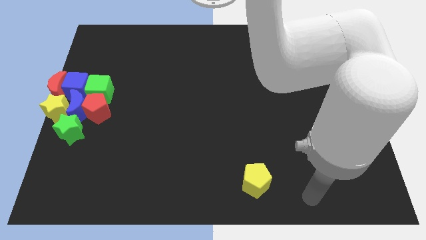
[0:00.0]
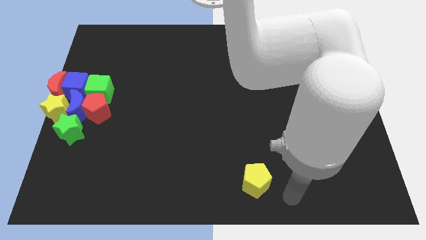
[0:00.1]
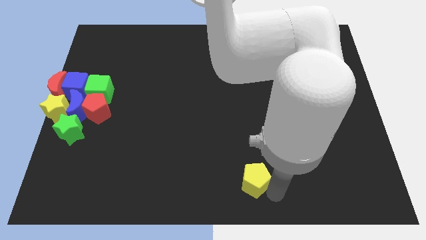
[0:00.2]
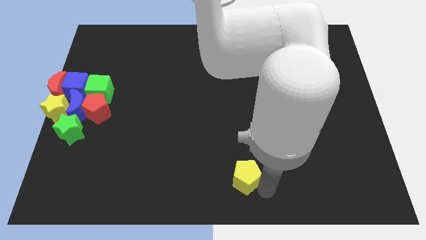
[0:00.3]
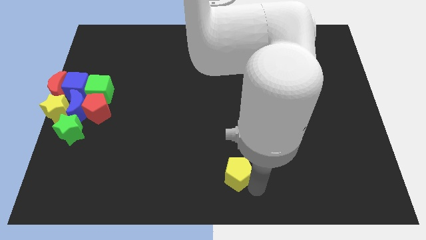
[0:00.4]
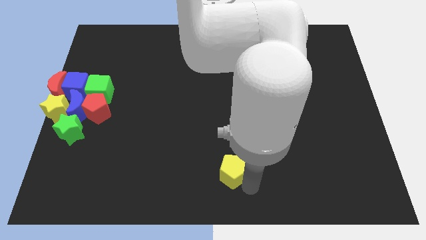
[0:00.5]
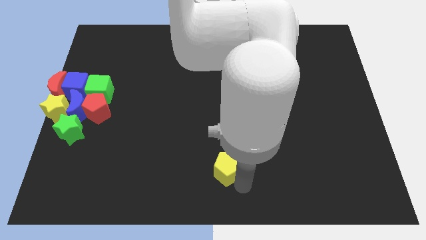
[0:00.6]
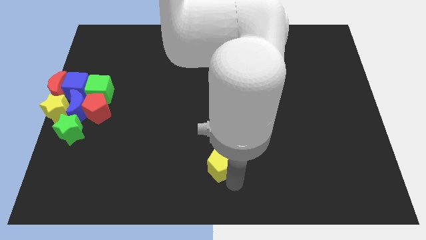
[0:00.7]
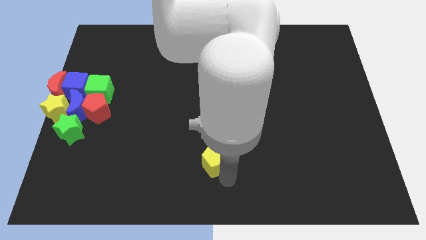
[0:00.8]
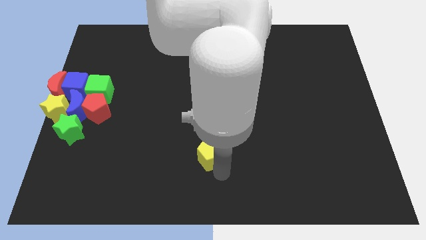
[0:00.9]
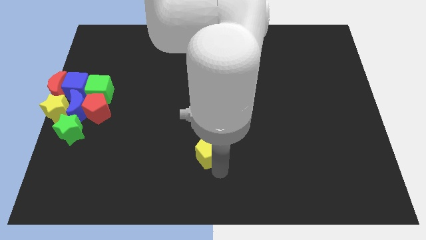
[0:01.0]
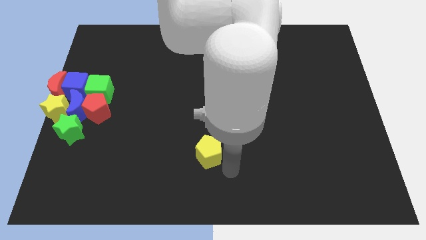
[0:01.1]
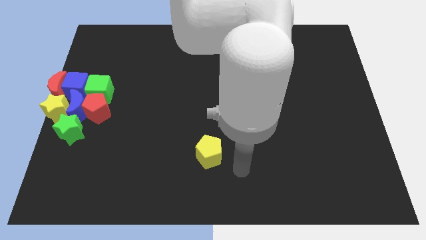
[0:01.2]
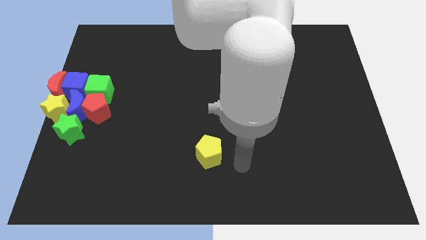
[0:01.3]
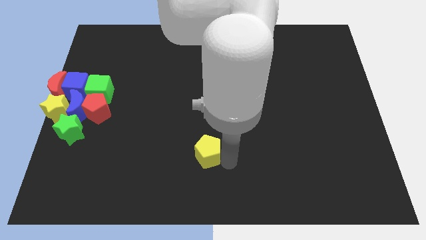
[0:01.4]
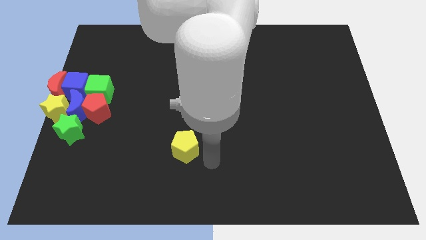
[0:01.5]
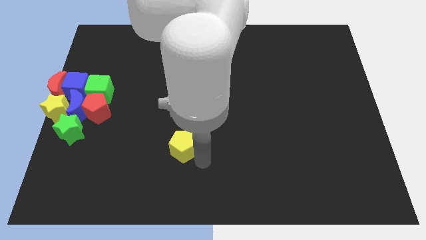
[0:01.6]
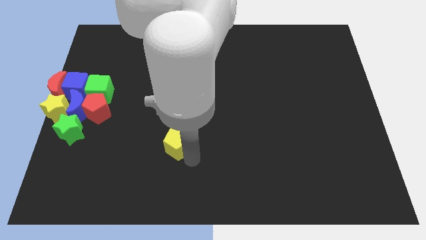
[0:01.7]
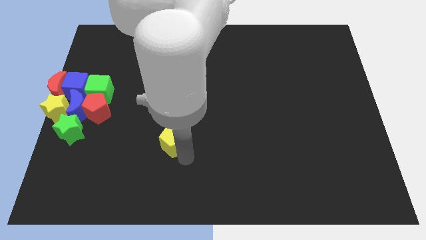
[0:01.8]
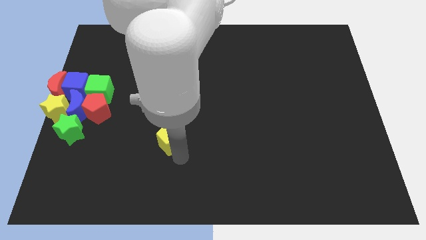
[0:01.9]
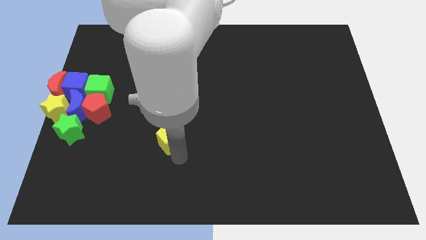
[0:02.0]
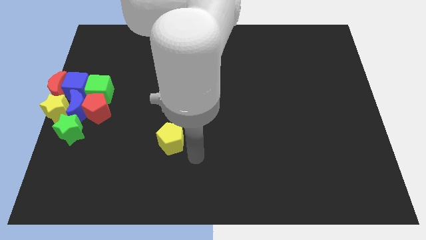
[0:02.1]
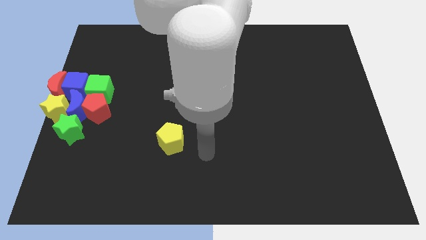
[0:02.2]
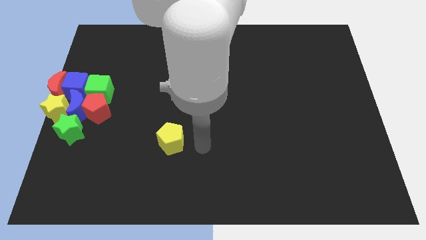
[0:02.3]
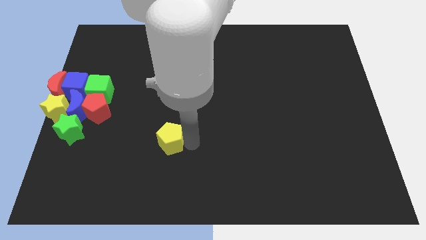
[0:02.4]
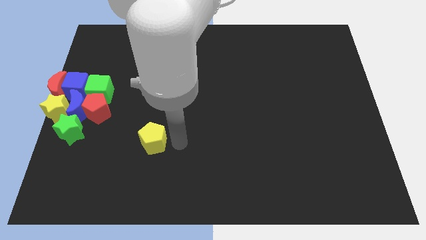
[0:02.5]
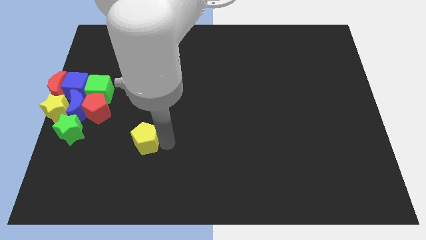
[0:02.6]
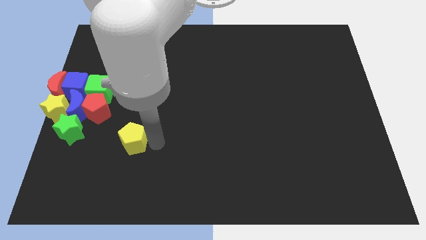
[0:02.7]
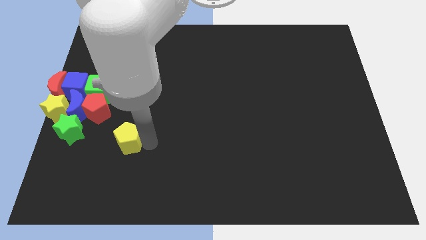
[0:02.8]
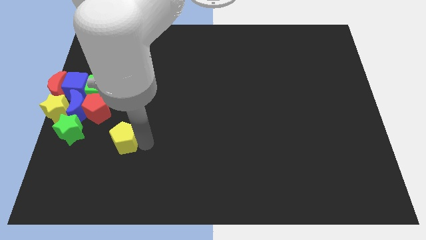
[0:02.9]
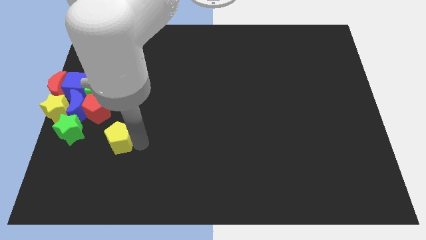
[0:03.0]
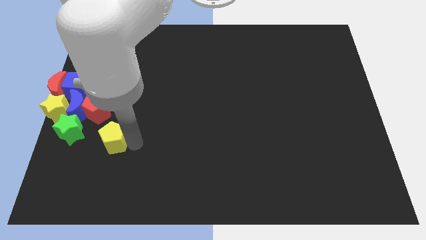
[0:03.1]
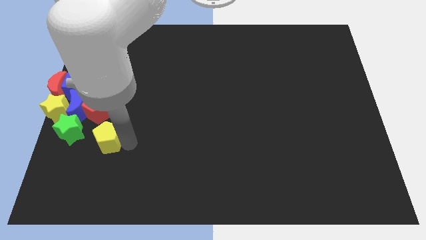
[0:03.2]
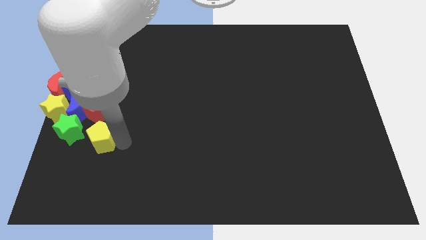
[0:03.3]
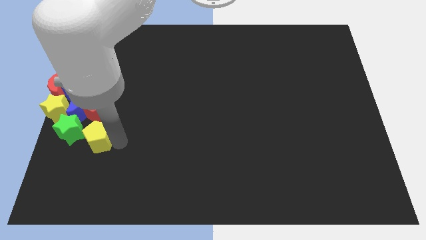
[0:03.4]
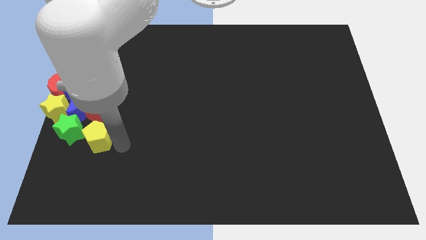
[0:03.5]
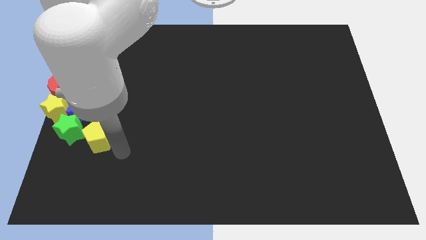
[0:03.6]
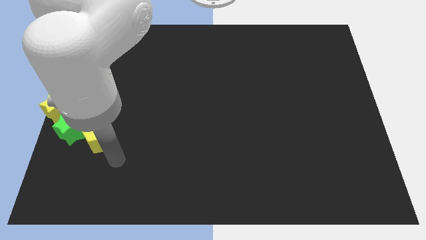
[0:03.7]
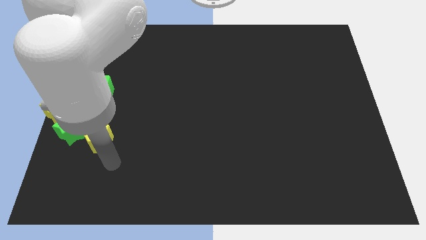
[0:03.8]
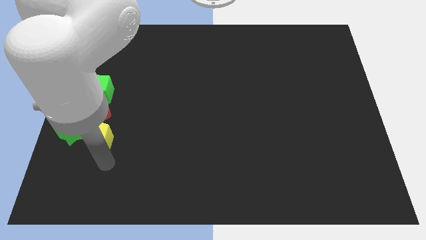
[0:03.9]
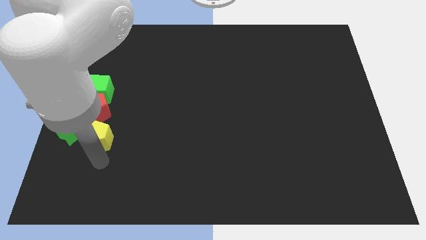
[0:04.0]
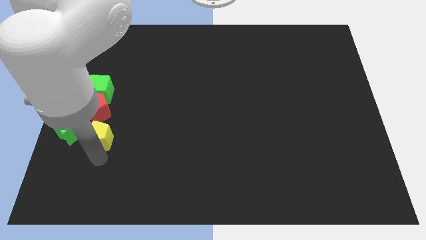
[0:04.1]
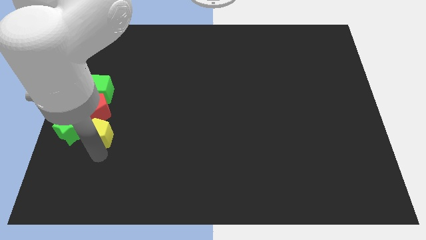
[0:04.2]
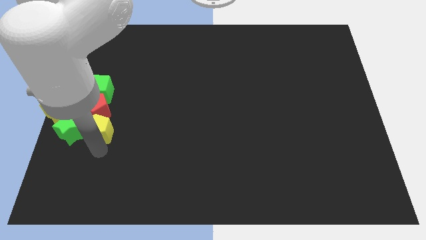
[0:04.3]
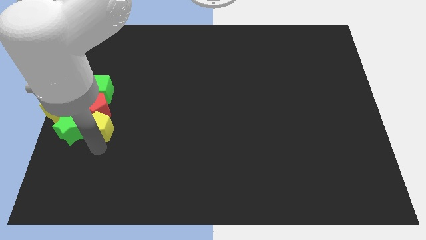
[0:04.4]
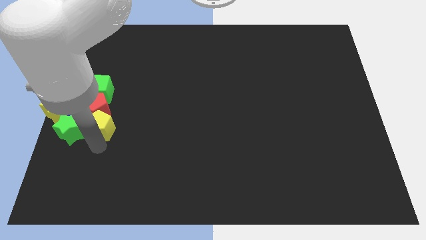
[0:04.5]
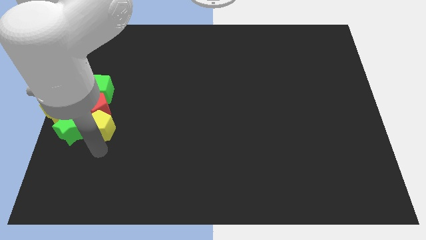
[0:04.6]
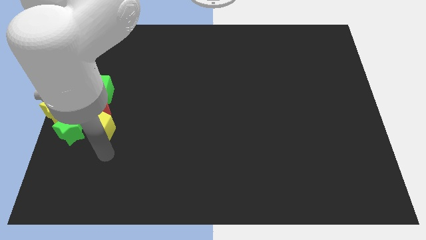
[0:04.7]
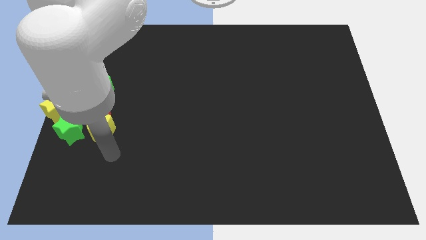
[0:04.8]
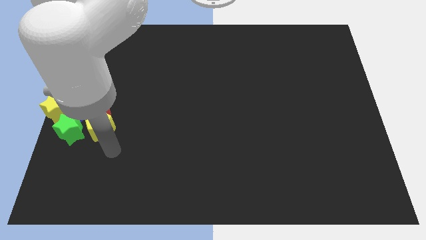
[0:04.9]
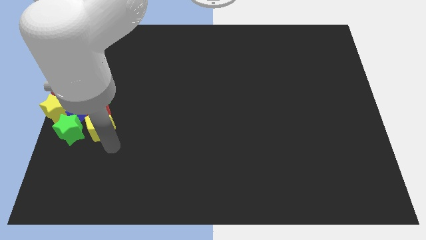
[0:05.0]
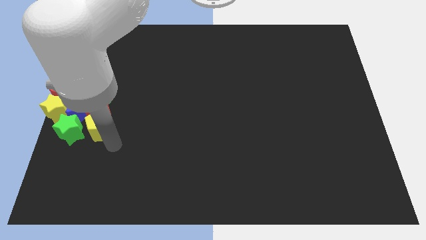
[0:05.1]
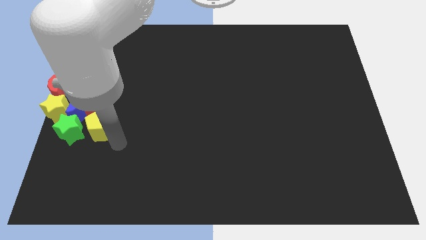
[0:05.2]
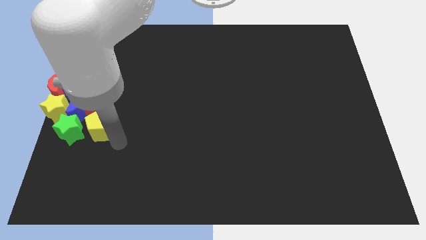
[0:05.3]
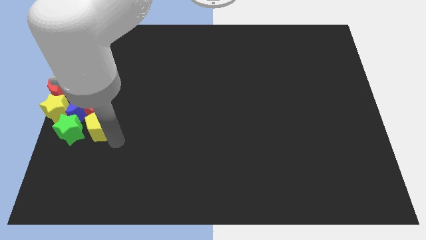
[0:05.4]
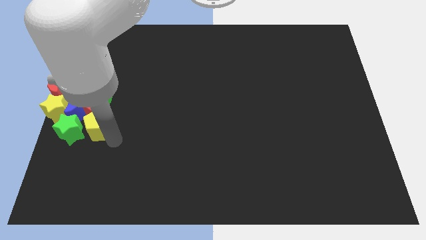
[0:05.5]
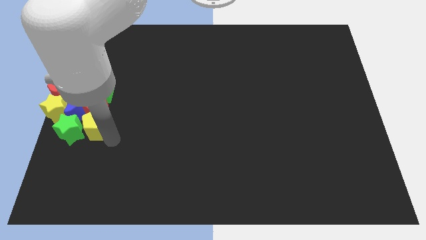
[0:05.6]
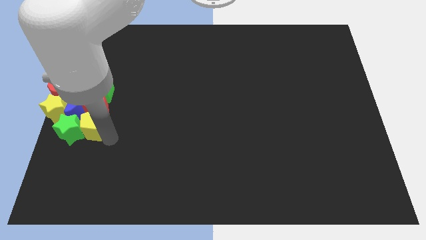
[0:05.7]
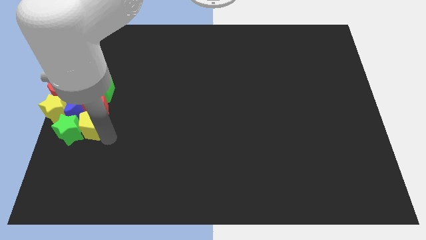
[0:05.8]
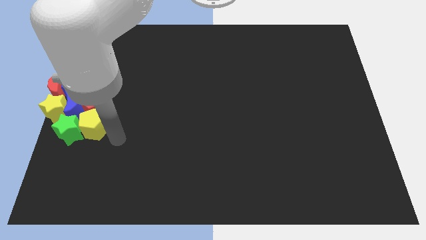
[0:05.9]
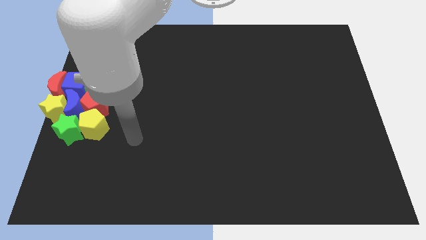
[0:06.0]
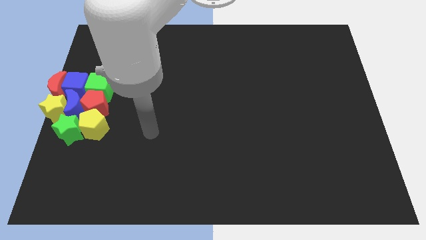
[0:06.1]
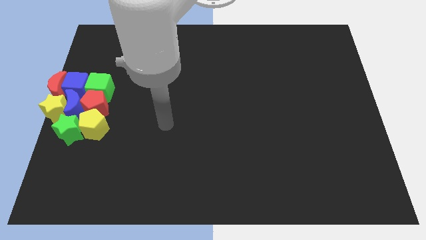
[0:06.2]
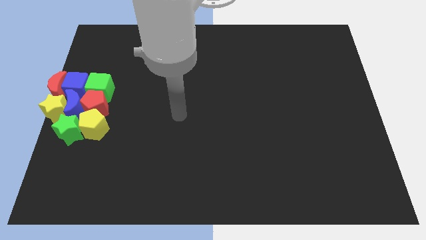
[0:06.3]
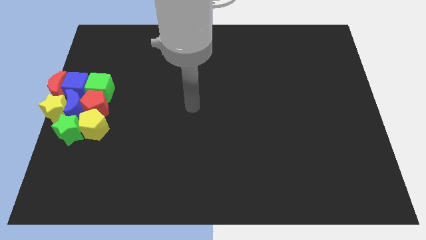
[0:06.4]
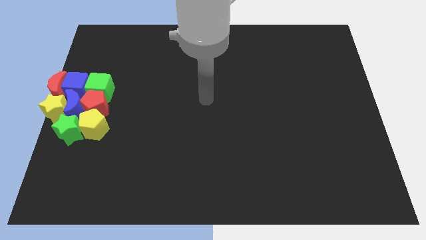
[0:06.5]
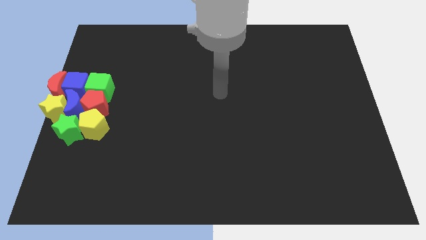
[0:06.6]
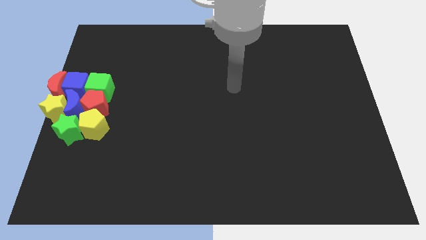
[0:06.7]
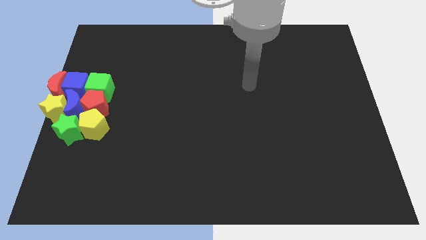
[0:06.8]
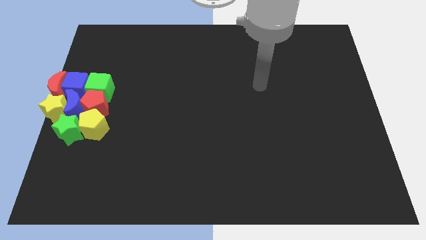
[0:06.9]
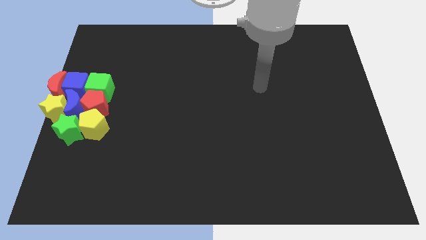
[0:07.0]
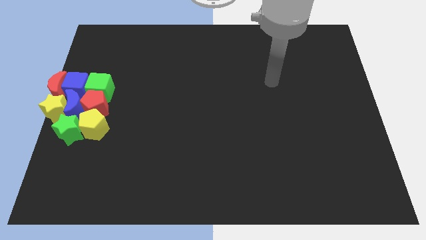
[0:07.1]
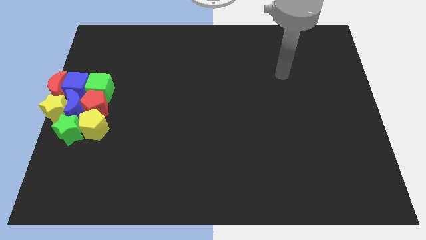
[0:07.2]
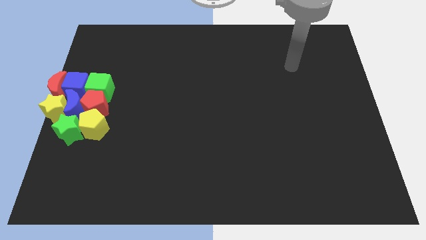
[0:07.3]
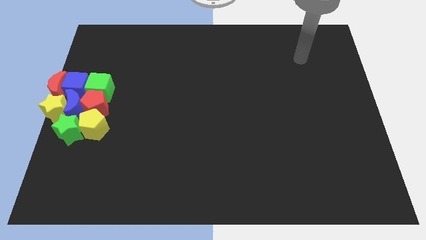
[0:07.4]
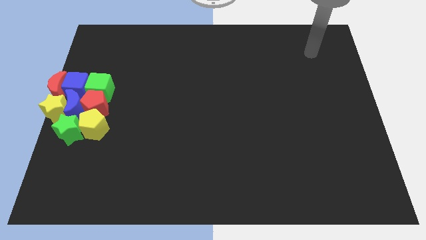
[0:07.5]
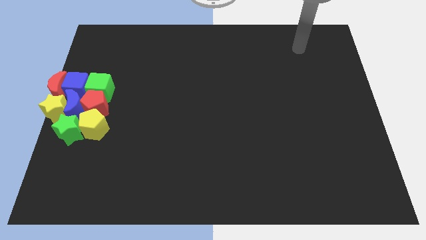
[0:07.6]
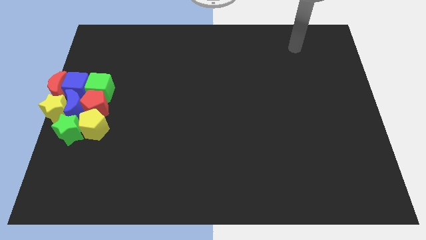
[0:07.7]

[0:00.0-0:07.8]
push the yellow pentagon to the right side of the green star

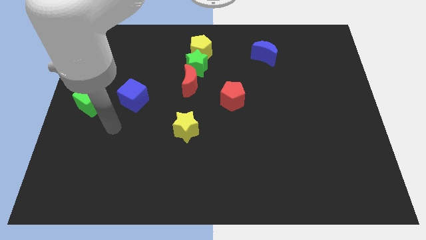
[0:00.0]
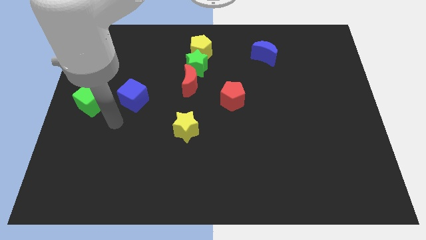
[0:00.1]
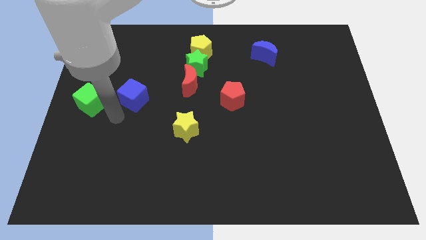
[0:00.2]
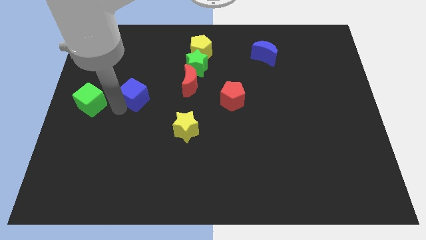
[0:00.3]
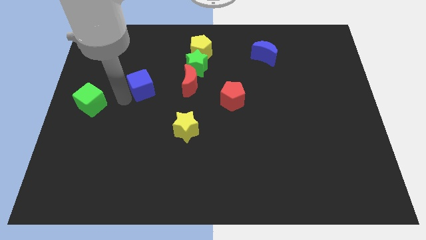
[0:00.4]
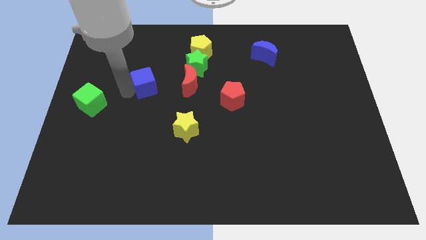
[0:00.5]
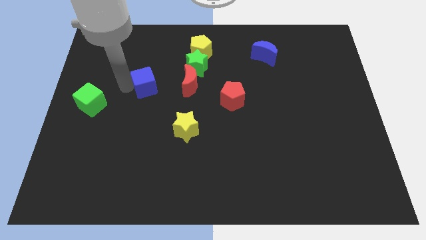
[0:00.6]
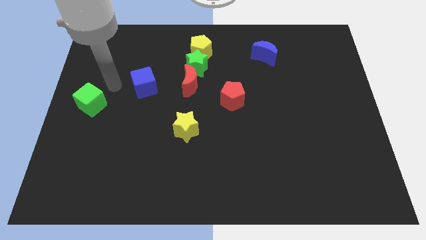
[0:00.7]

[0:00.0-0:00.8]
place the blue cube to the left of the red moon

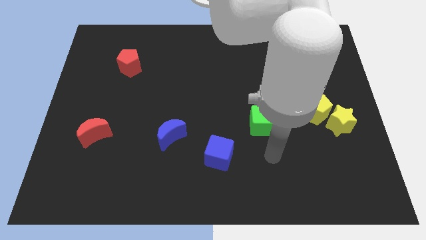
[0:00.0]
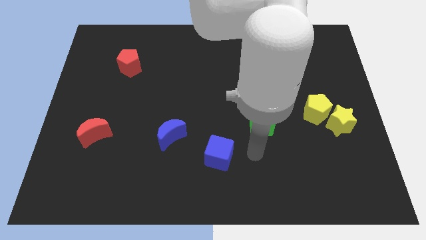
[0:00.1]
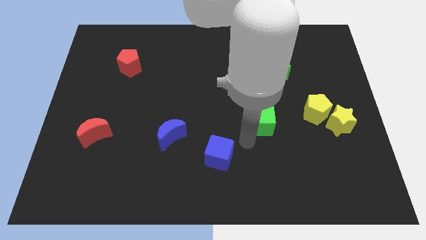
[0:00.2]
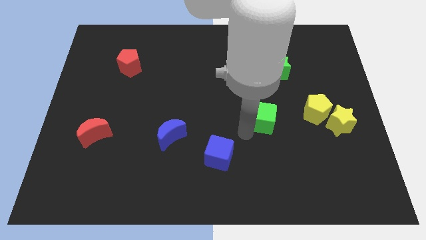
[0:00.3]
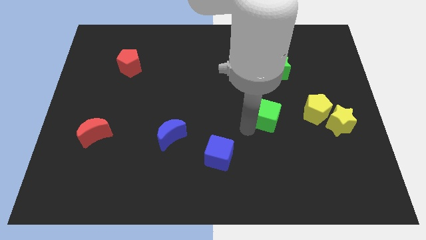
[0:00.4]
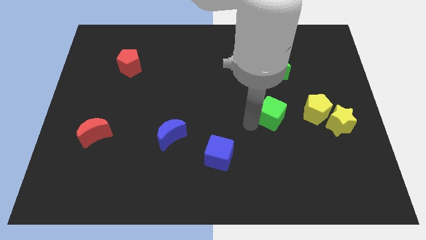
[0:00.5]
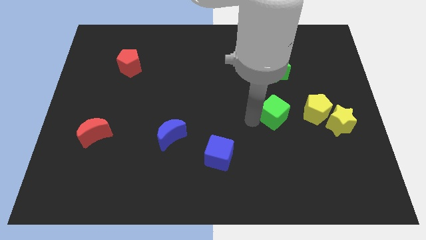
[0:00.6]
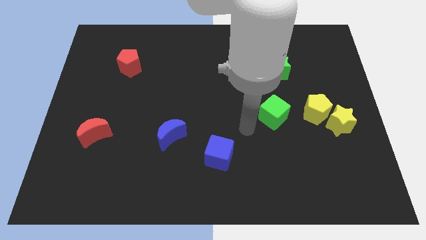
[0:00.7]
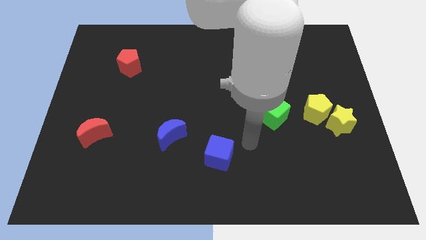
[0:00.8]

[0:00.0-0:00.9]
push green cube slightly towards up
